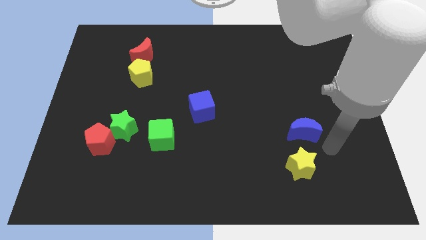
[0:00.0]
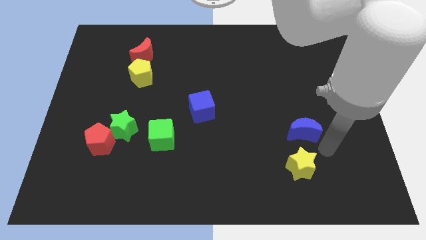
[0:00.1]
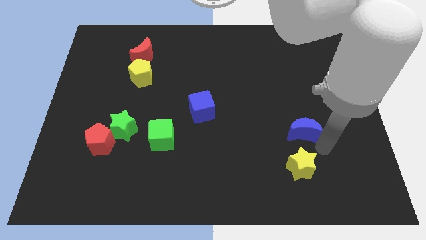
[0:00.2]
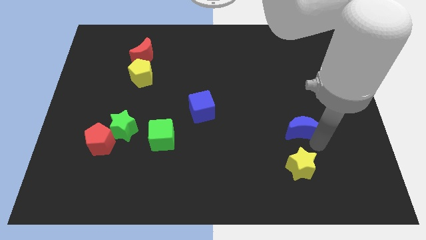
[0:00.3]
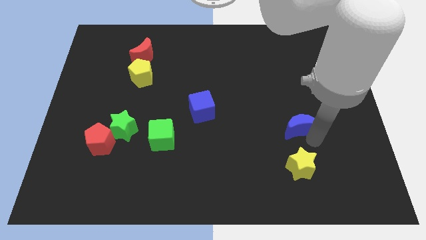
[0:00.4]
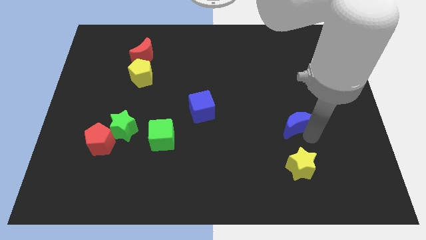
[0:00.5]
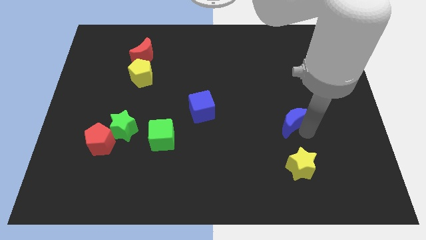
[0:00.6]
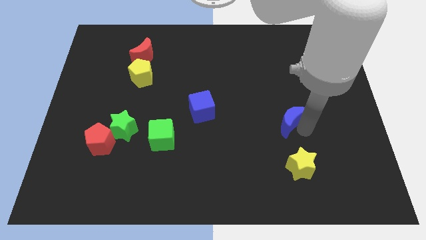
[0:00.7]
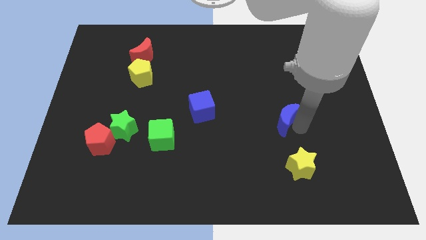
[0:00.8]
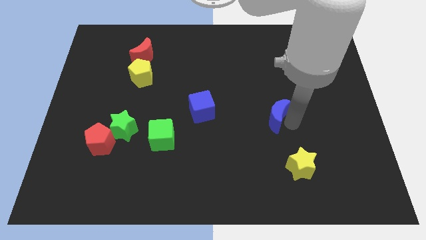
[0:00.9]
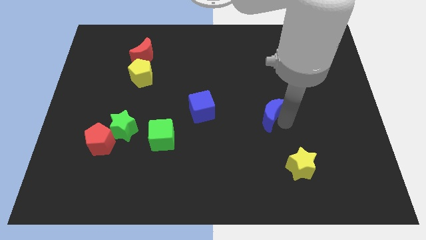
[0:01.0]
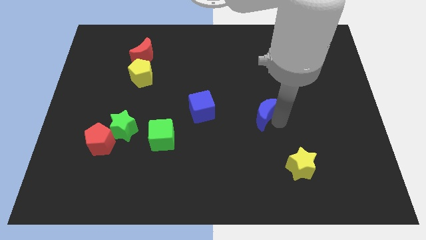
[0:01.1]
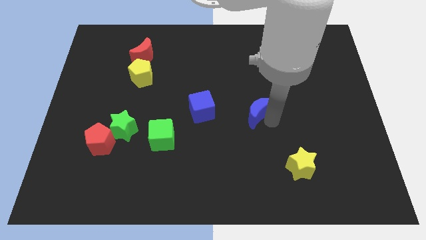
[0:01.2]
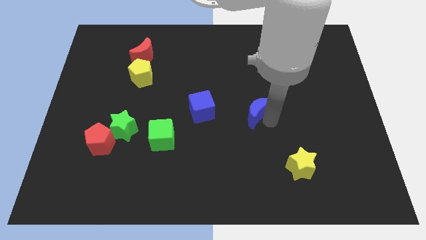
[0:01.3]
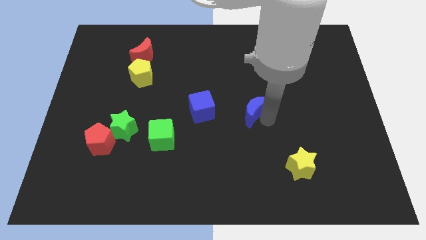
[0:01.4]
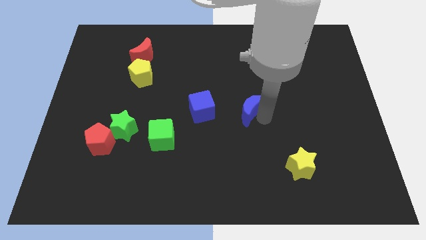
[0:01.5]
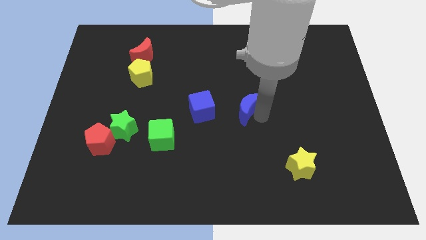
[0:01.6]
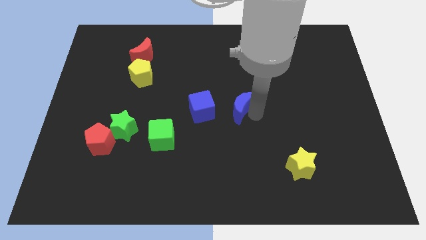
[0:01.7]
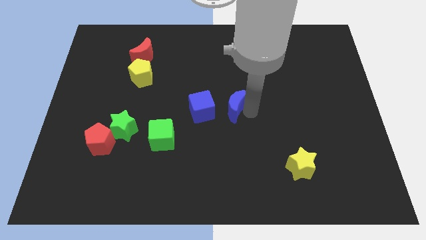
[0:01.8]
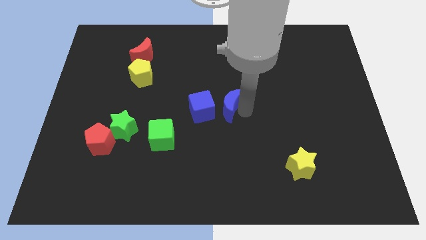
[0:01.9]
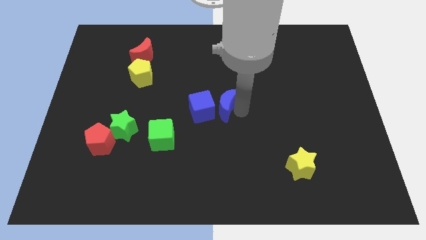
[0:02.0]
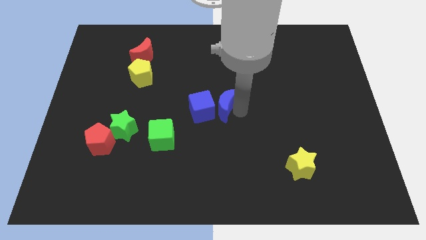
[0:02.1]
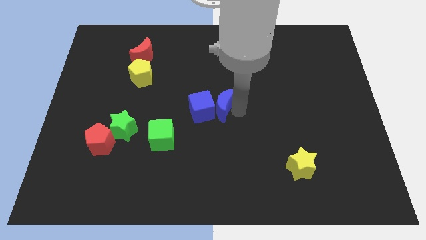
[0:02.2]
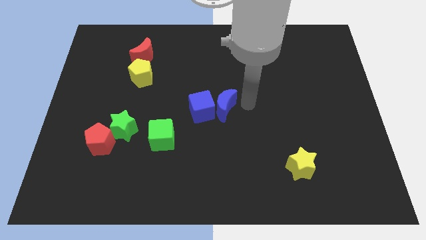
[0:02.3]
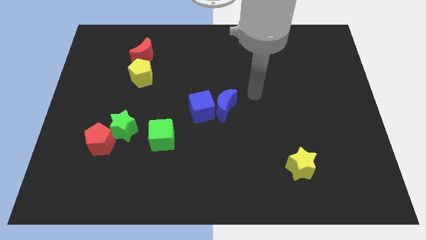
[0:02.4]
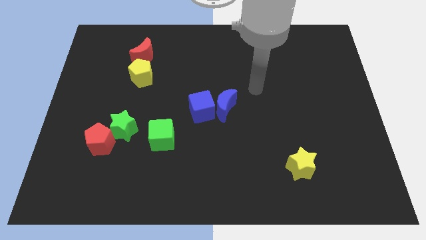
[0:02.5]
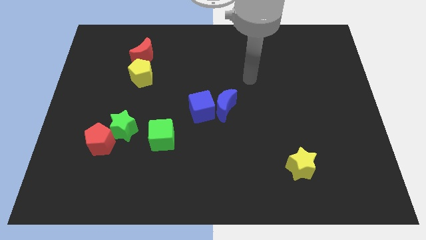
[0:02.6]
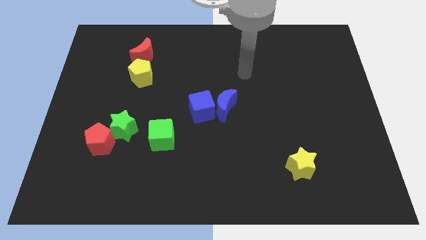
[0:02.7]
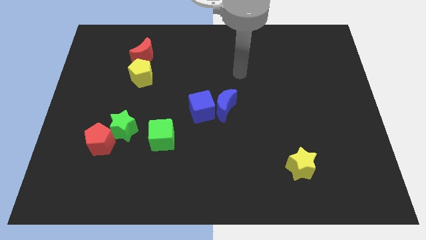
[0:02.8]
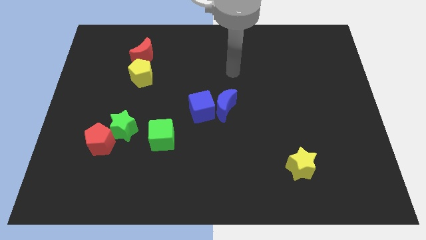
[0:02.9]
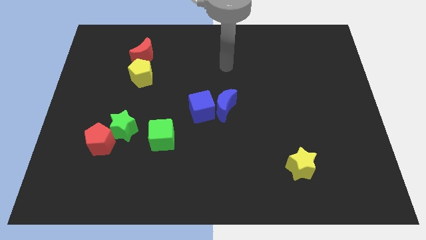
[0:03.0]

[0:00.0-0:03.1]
move blue moon into blue cube

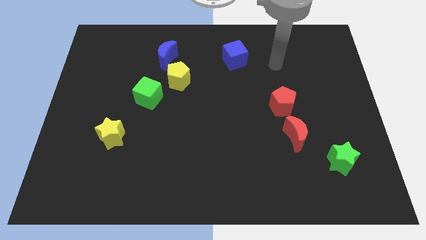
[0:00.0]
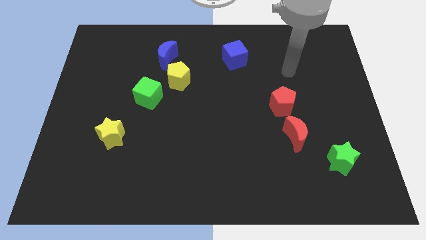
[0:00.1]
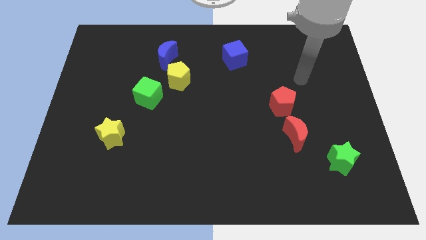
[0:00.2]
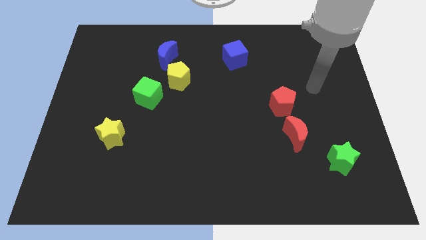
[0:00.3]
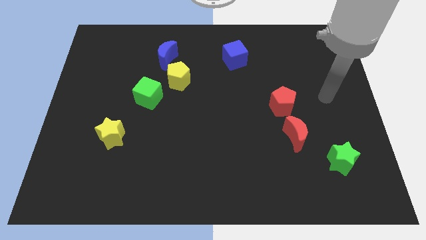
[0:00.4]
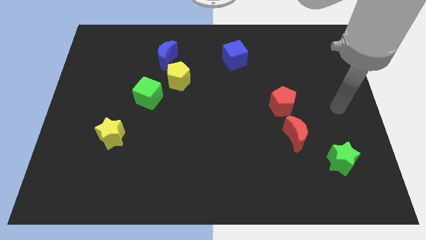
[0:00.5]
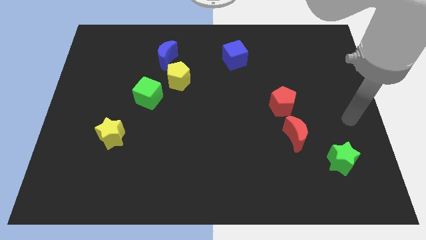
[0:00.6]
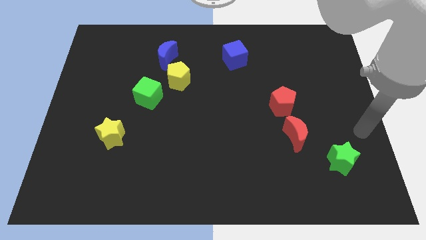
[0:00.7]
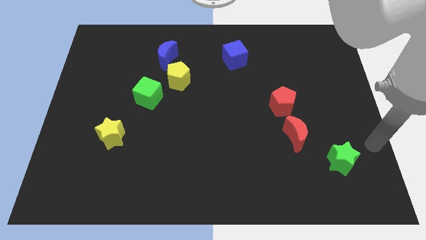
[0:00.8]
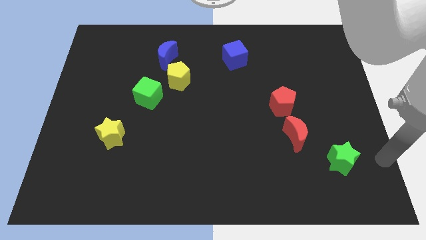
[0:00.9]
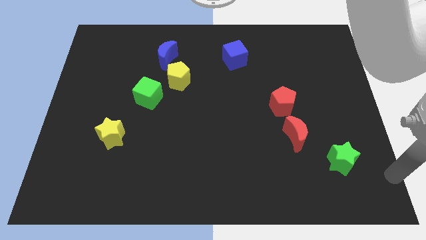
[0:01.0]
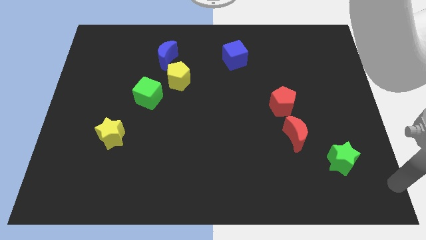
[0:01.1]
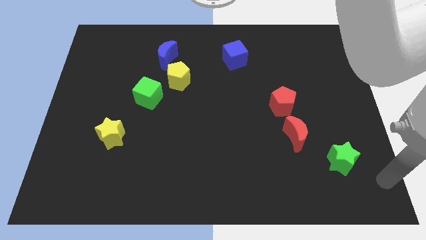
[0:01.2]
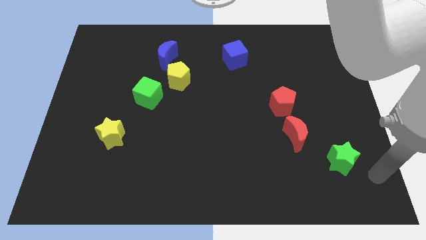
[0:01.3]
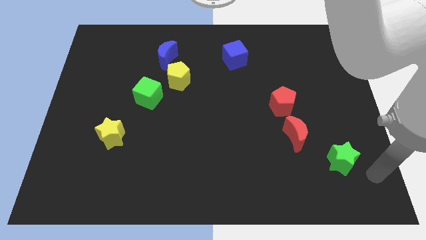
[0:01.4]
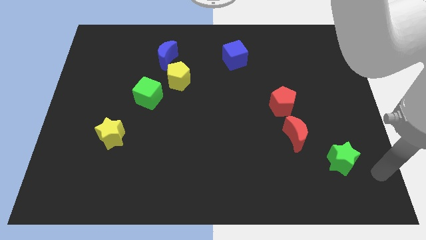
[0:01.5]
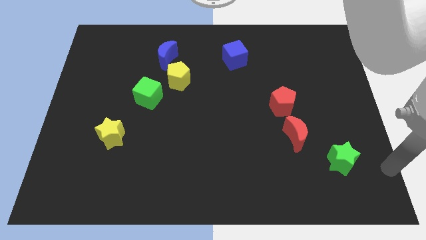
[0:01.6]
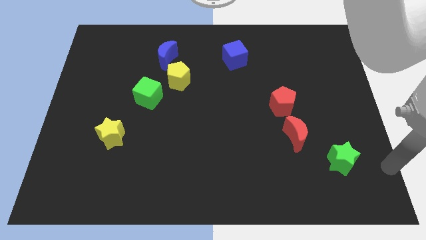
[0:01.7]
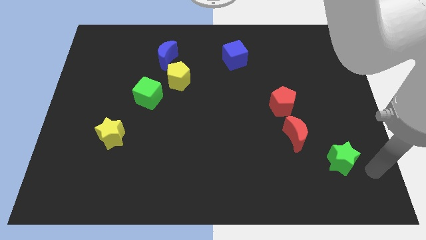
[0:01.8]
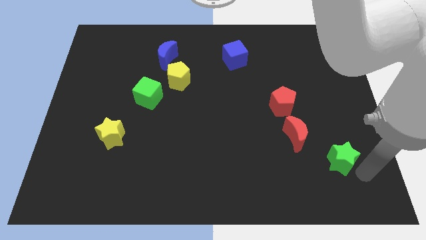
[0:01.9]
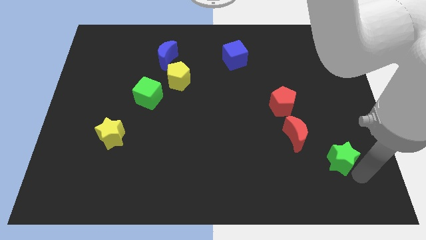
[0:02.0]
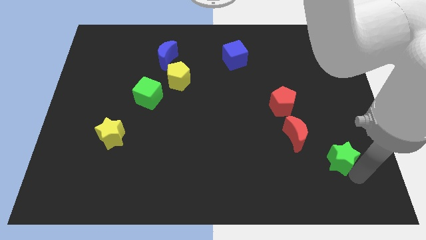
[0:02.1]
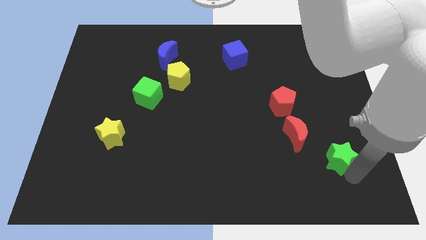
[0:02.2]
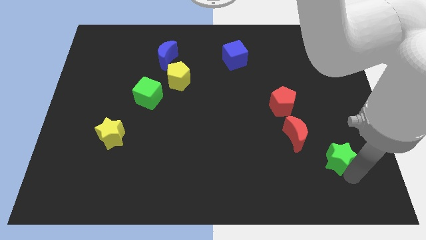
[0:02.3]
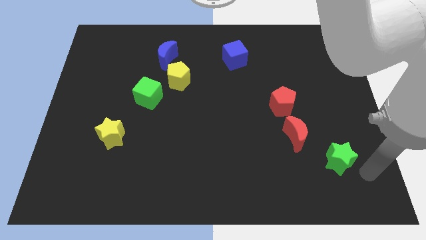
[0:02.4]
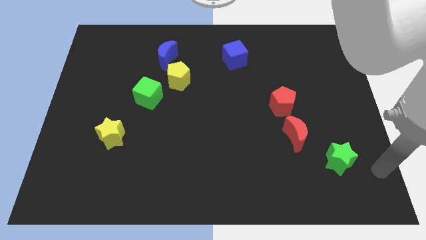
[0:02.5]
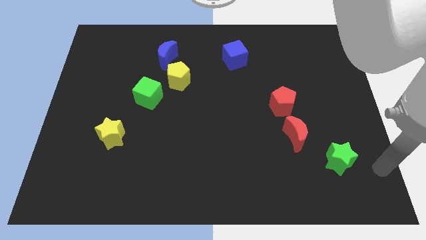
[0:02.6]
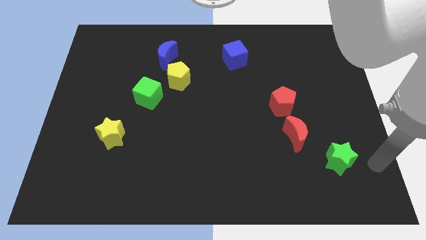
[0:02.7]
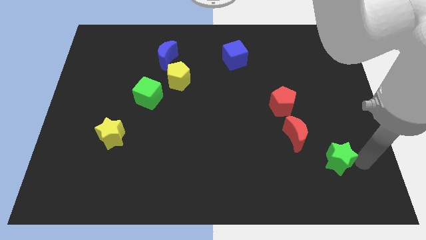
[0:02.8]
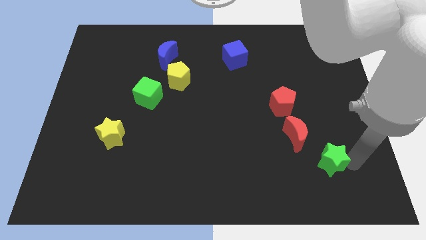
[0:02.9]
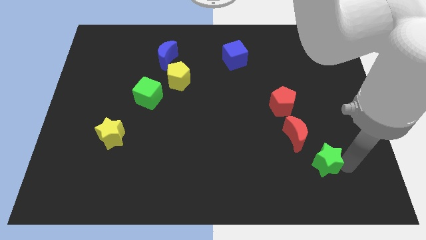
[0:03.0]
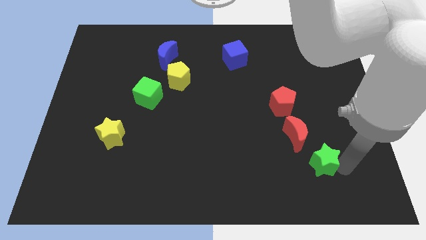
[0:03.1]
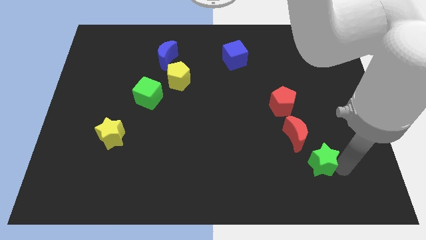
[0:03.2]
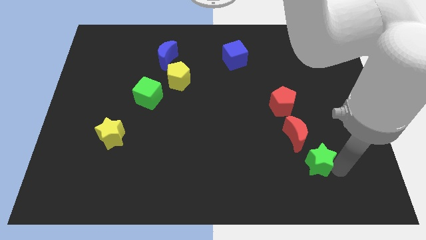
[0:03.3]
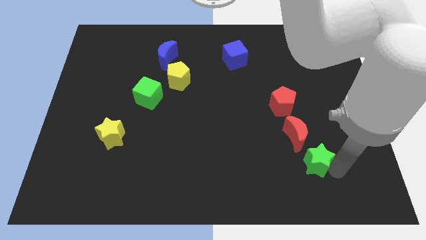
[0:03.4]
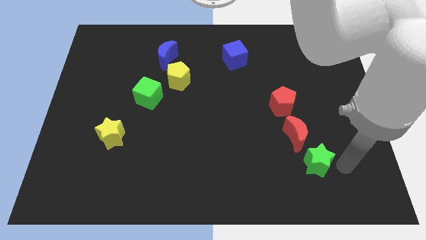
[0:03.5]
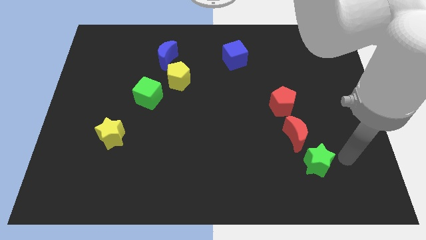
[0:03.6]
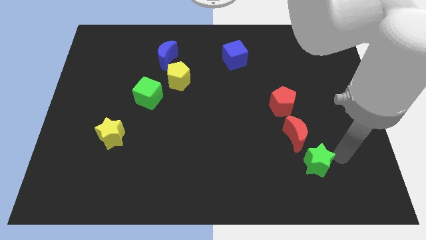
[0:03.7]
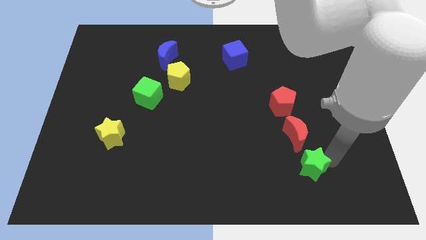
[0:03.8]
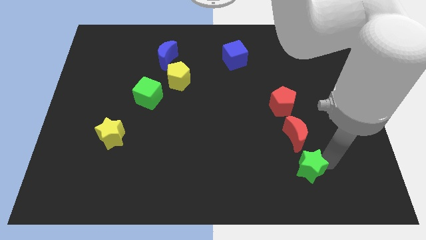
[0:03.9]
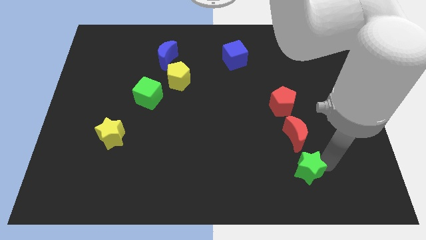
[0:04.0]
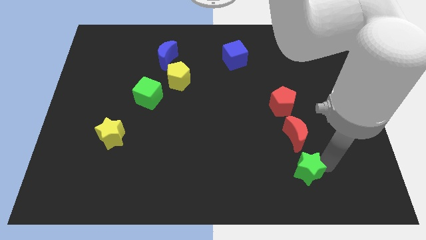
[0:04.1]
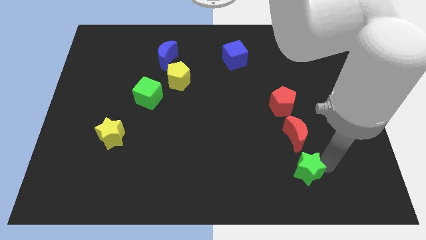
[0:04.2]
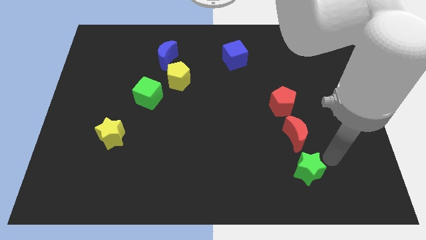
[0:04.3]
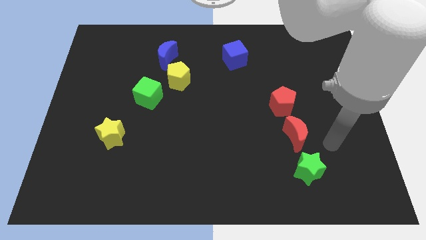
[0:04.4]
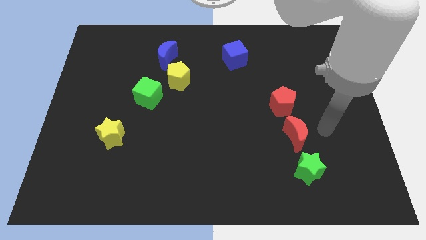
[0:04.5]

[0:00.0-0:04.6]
place green star vertically below the red moon

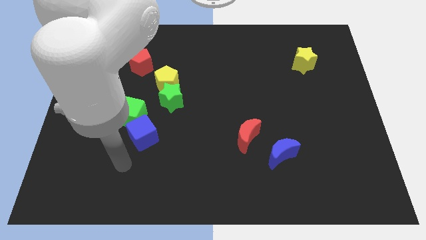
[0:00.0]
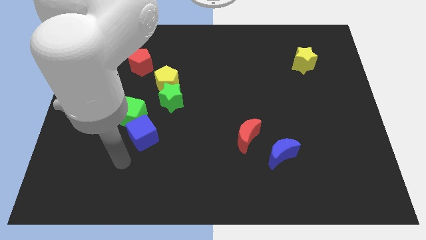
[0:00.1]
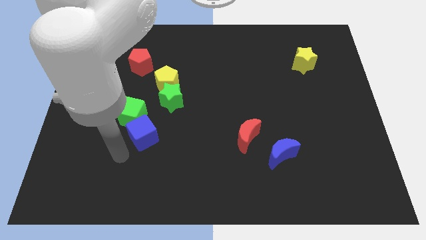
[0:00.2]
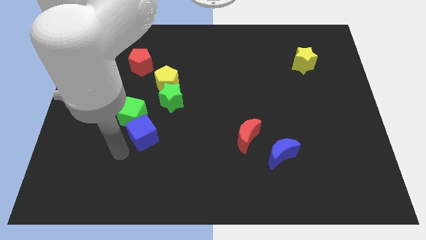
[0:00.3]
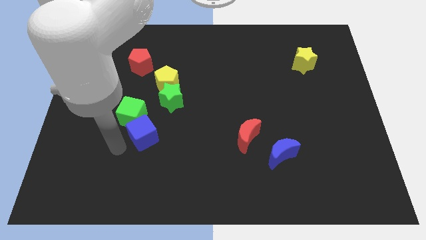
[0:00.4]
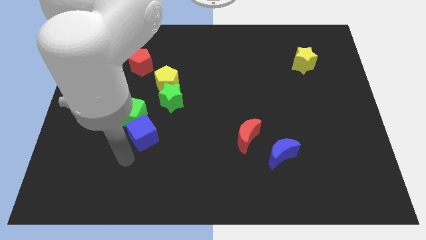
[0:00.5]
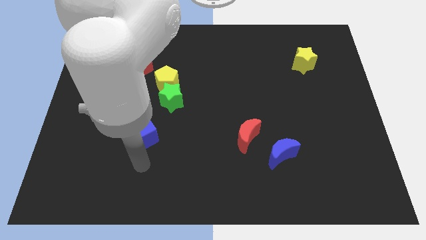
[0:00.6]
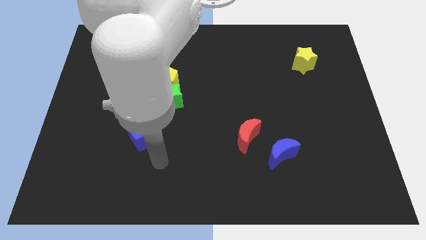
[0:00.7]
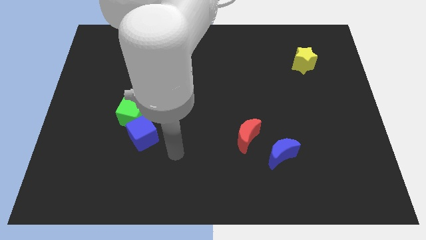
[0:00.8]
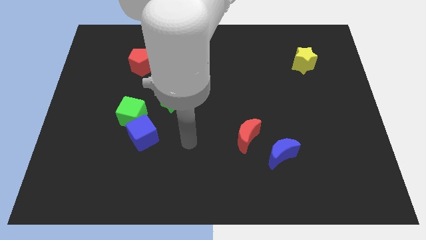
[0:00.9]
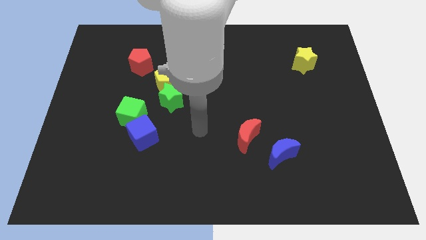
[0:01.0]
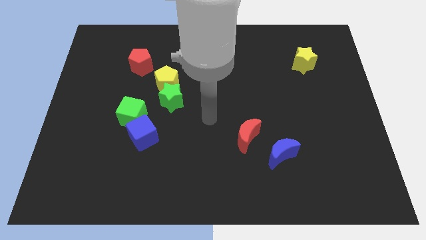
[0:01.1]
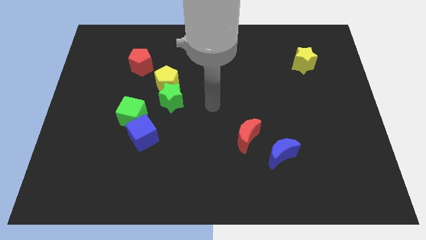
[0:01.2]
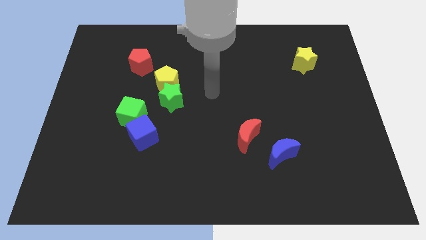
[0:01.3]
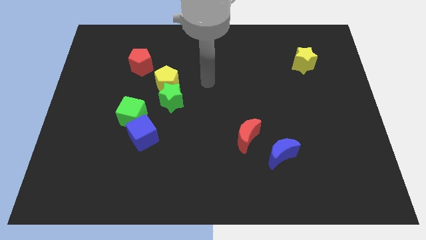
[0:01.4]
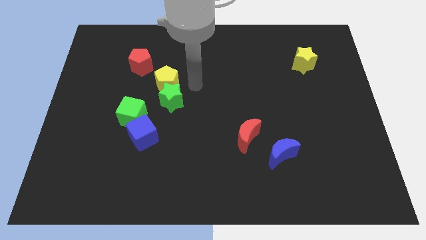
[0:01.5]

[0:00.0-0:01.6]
put your arm to the right of the yellow pentagon
